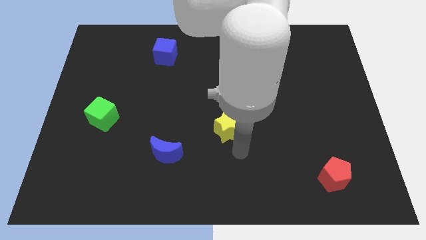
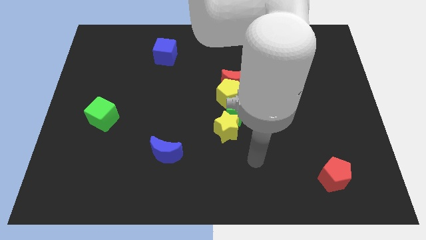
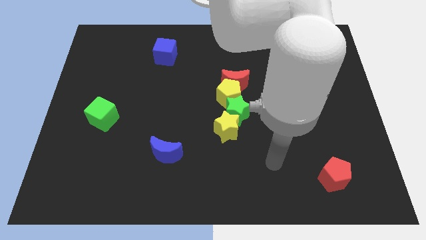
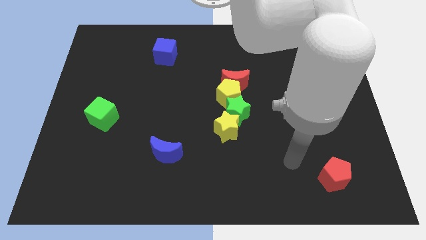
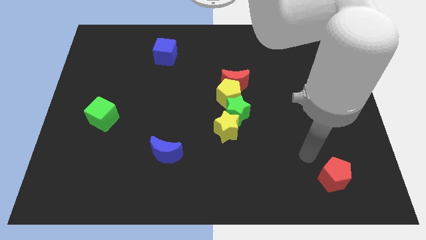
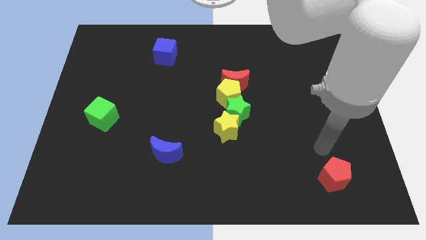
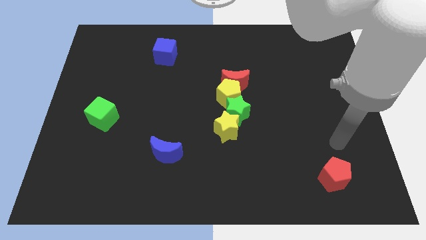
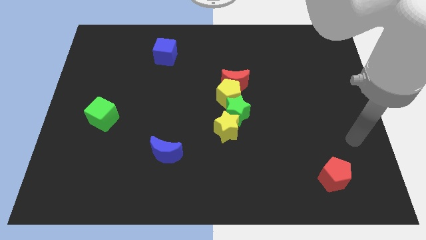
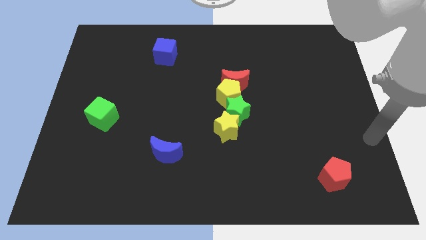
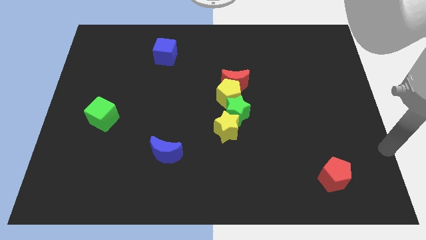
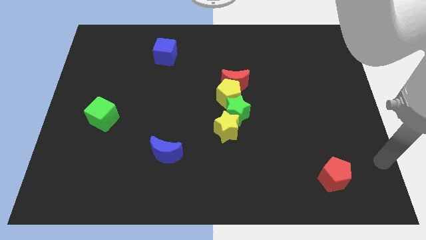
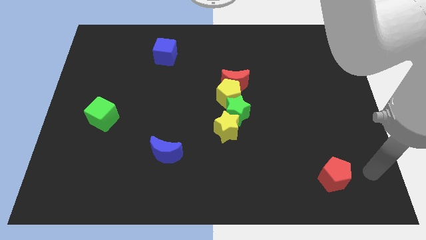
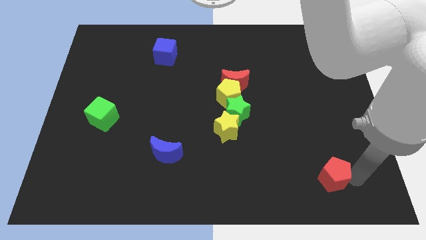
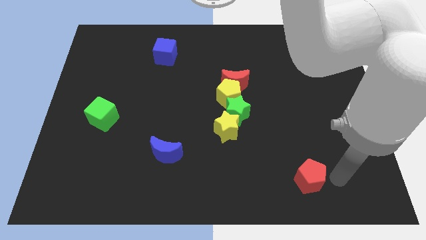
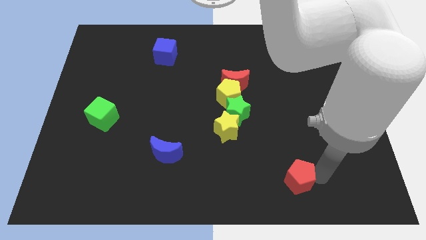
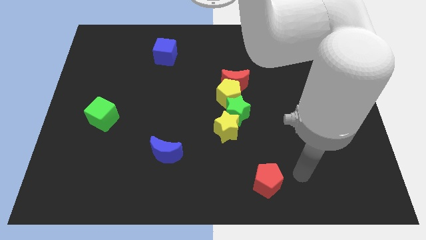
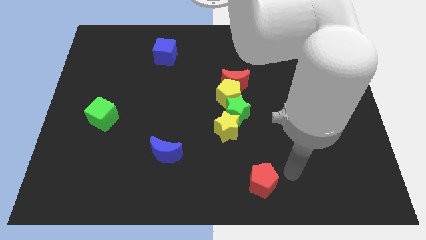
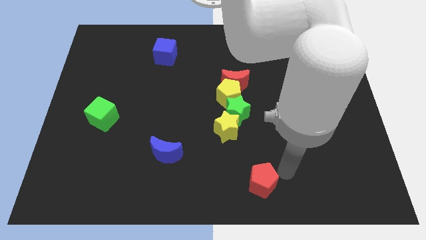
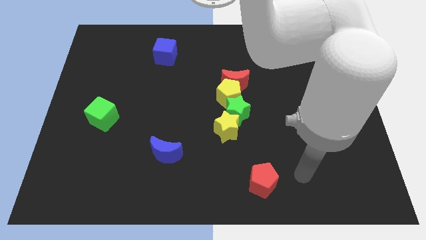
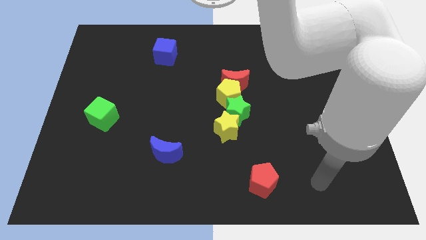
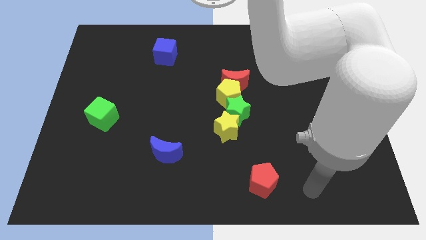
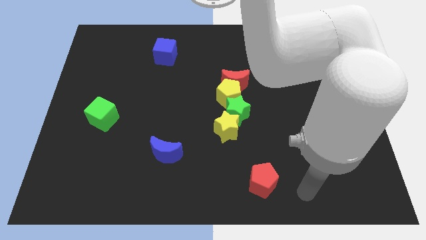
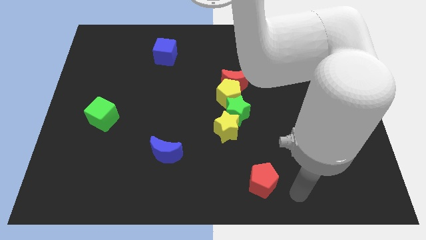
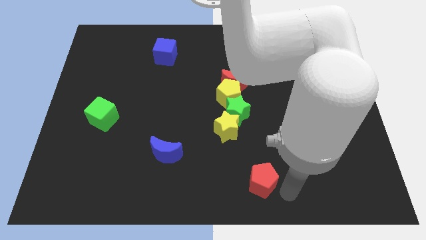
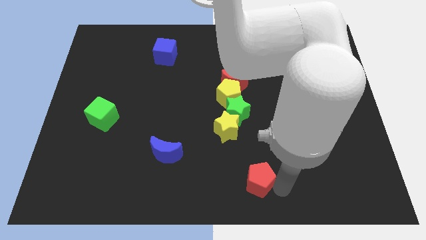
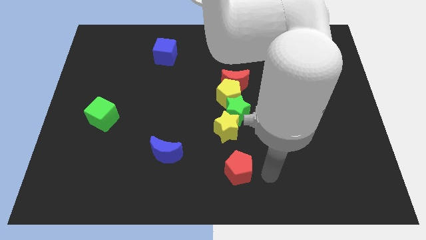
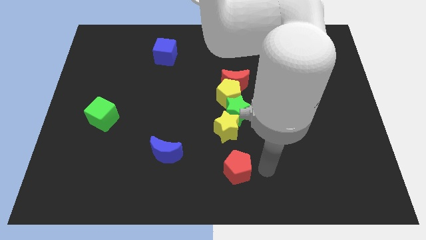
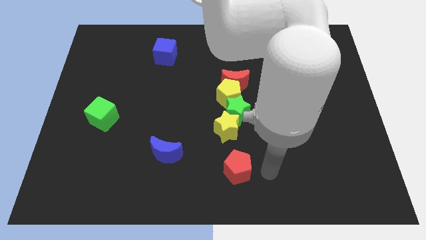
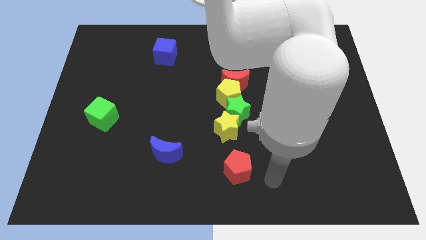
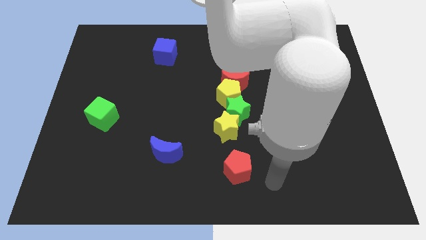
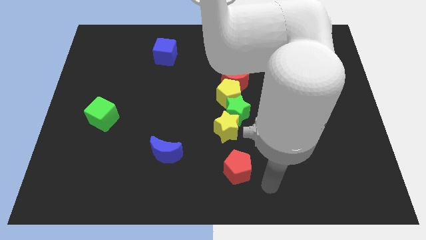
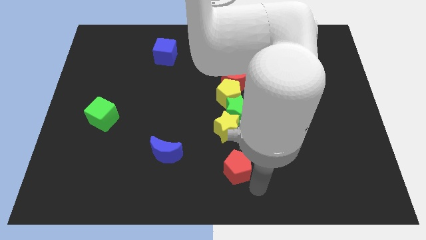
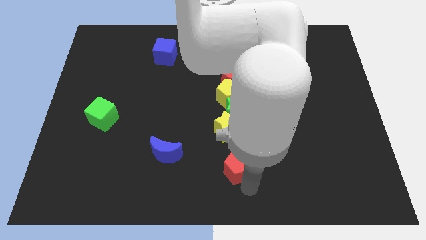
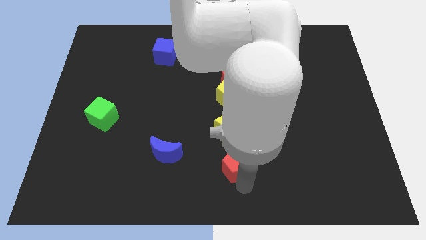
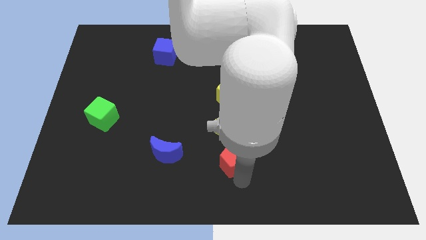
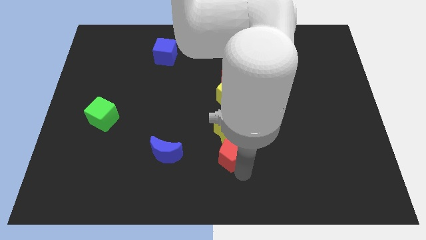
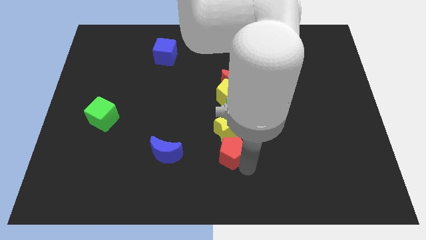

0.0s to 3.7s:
drag the red pentagon vertically below the yellow star

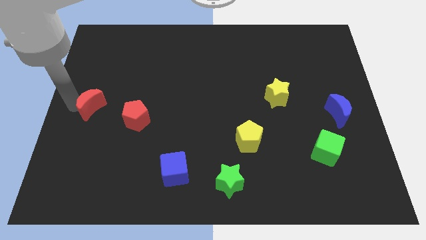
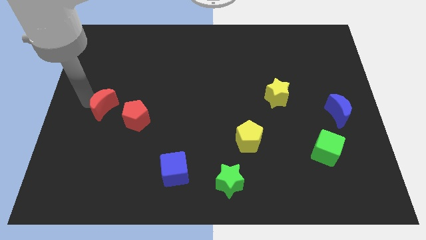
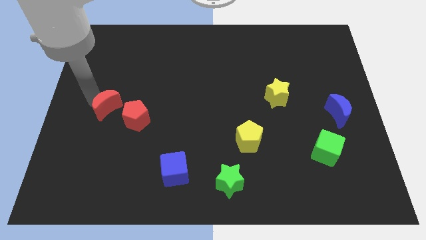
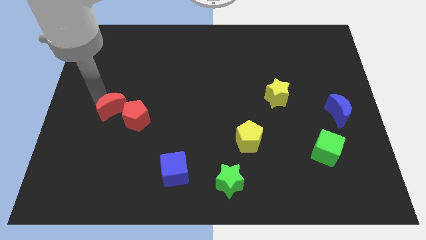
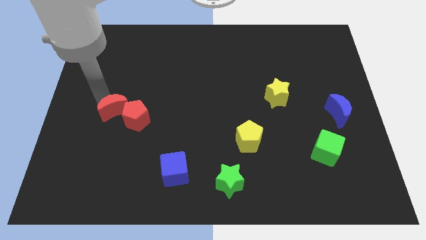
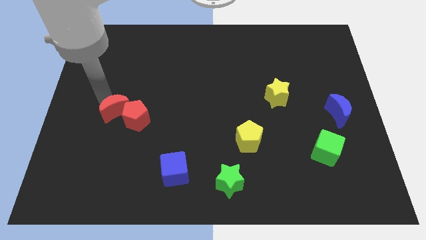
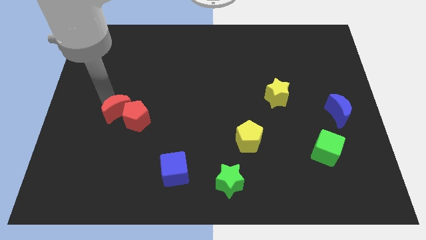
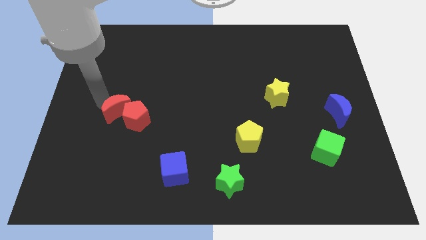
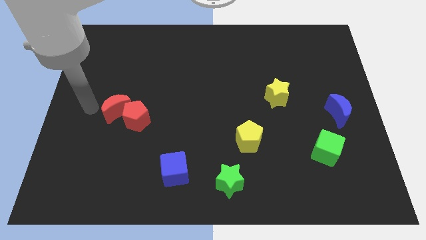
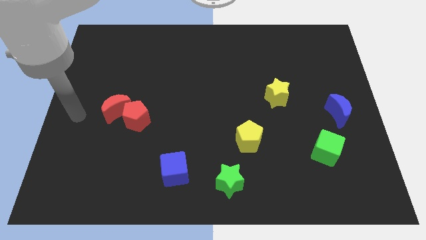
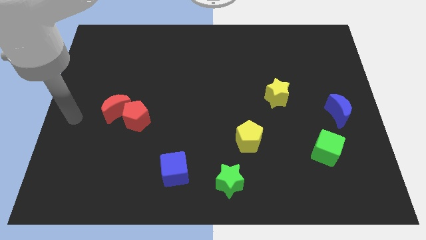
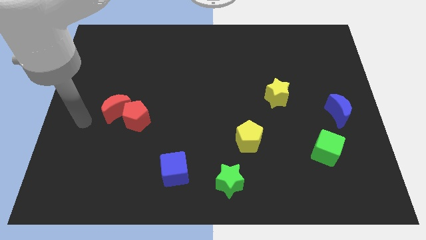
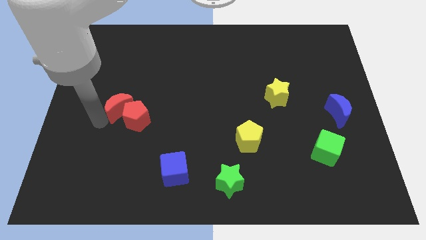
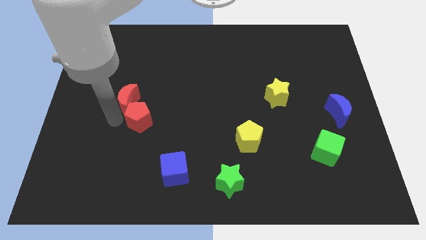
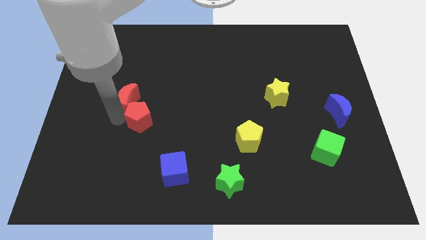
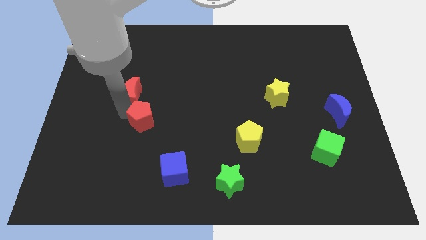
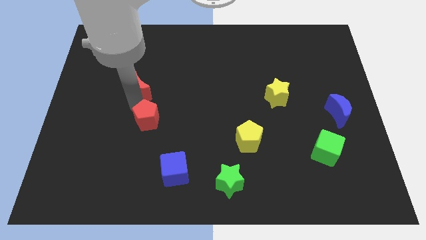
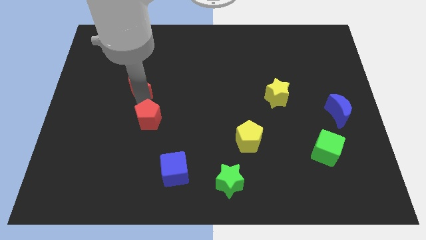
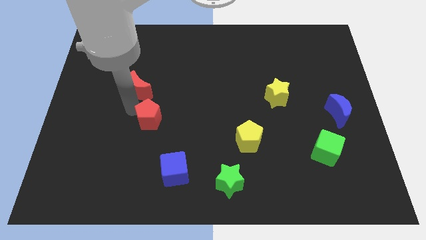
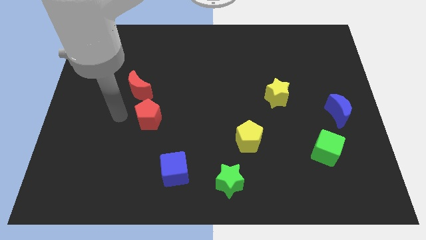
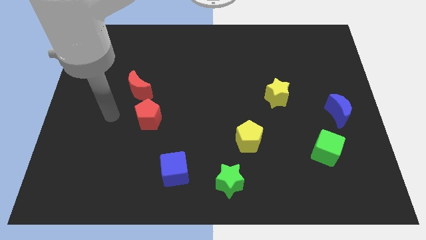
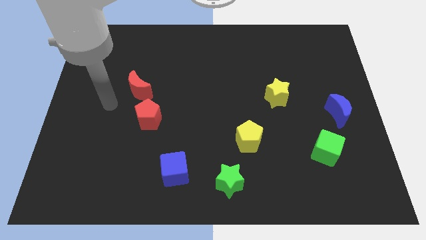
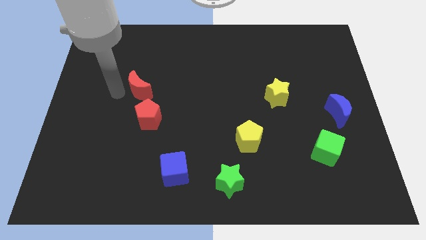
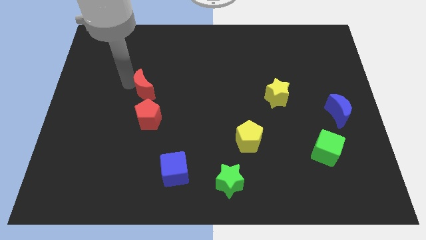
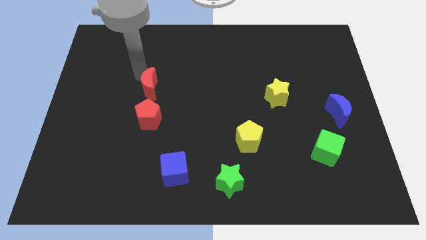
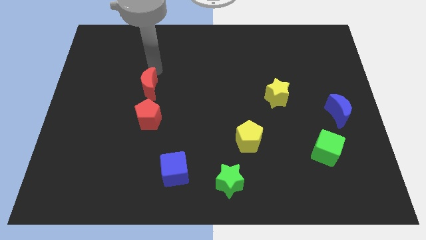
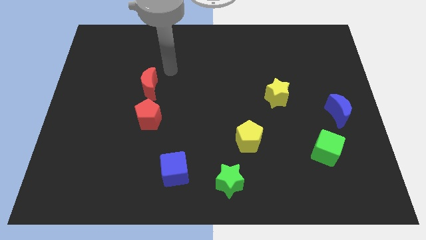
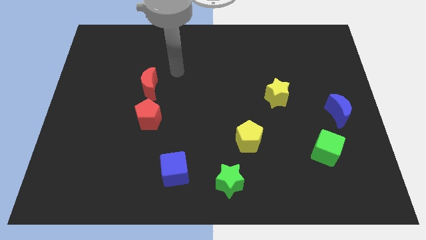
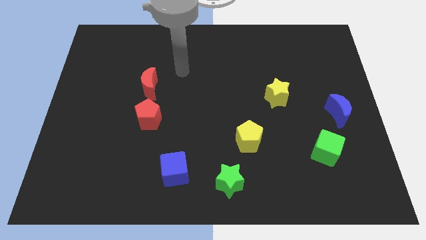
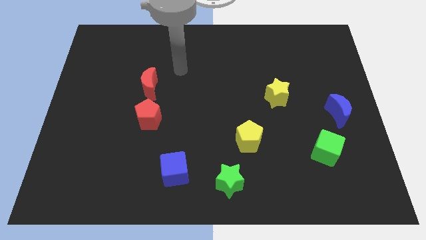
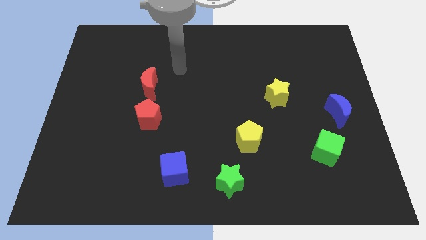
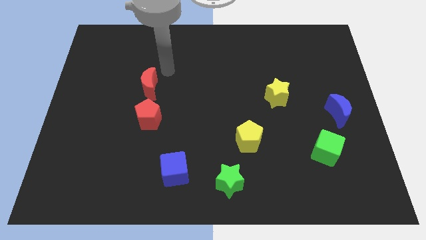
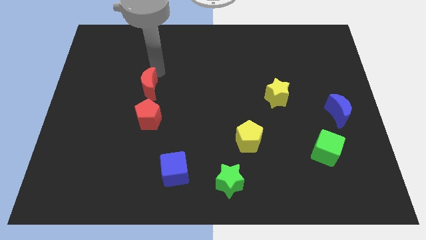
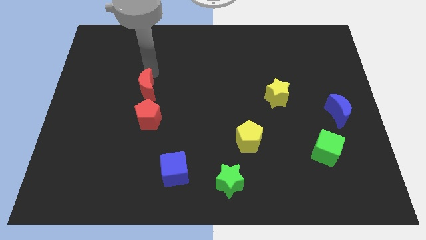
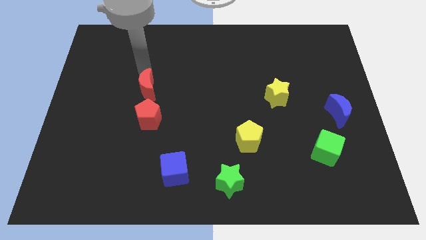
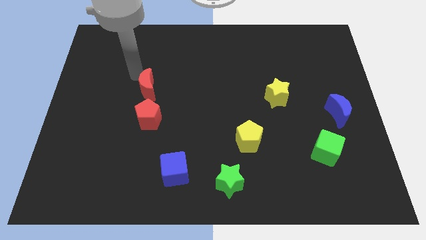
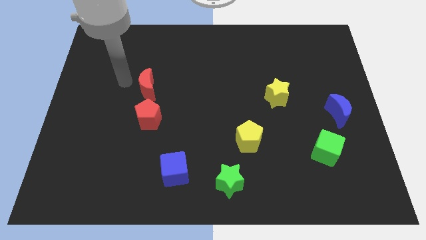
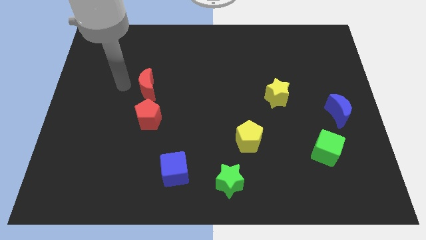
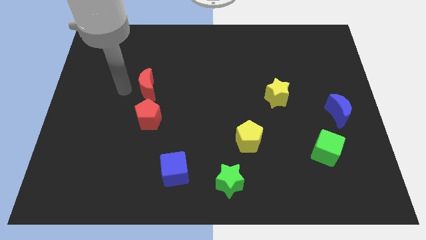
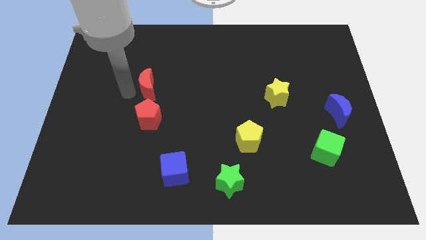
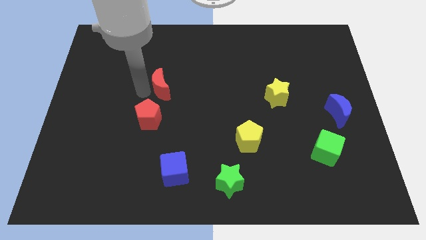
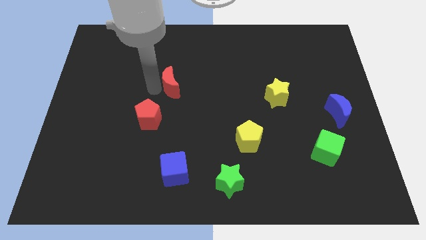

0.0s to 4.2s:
place the red pentagon to the left of the yellow star

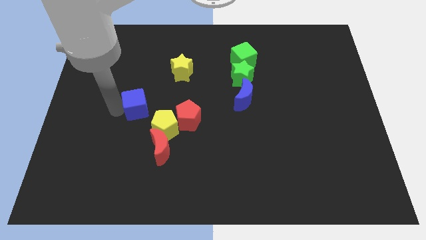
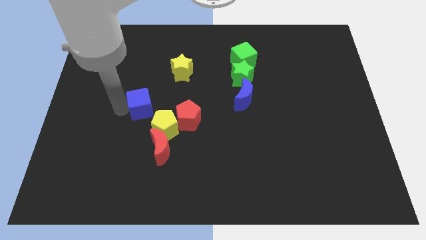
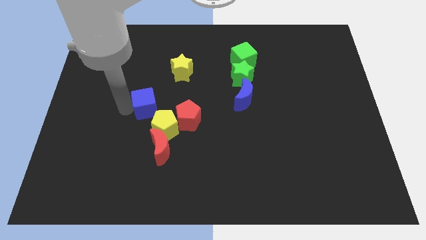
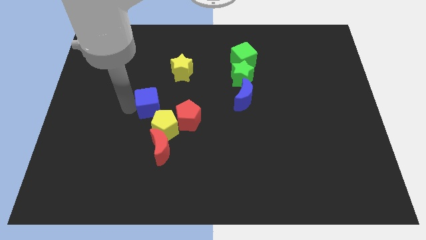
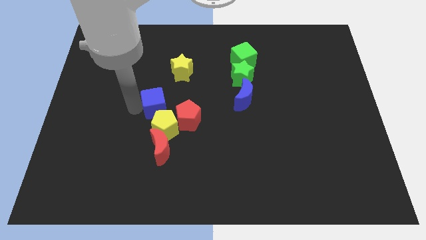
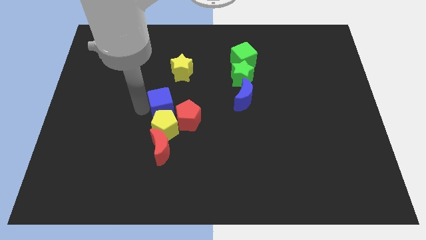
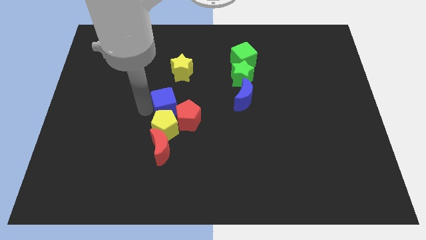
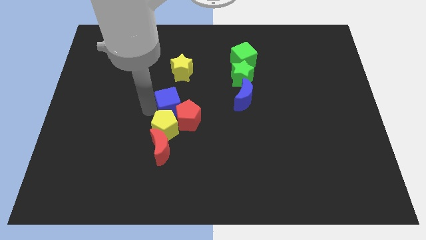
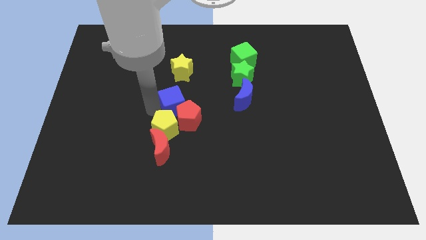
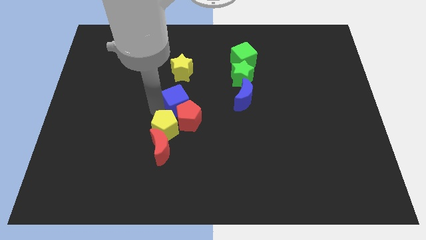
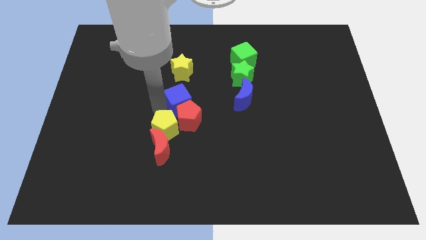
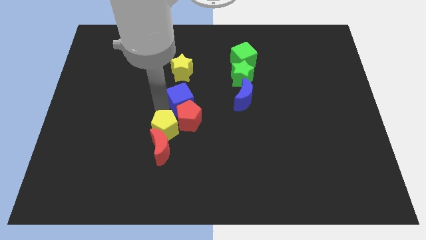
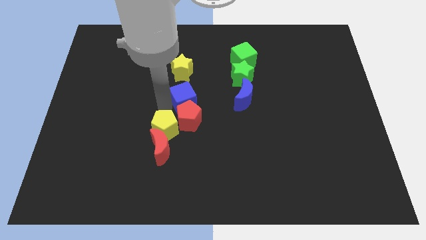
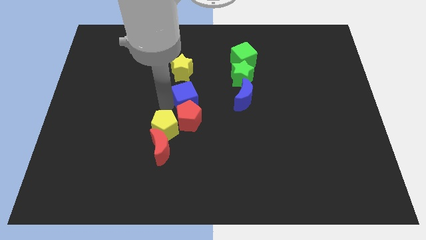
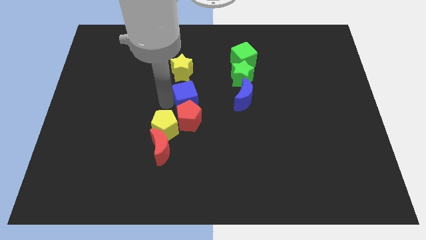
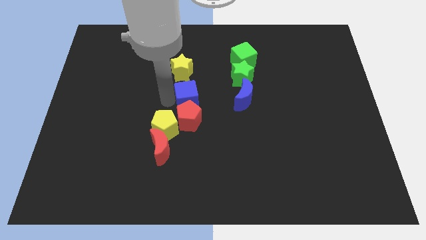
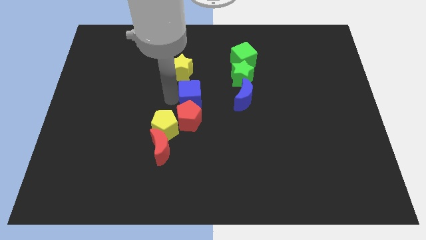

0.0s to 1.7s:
push the blue cube to the center of the board
